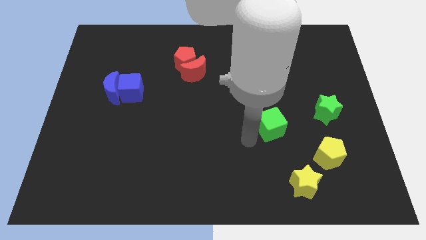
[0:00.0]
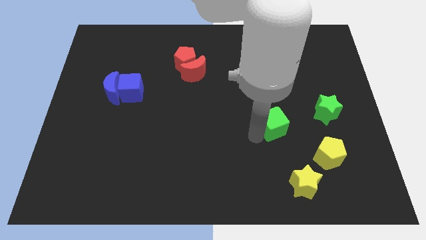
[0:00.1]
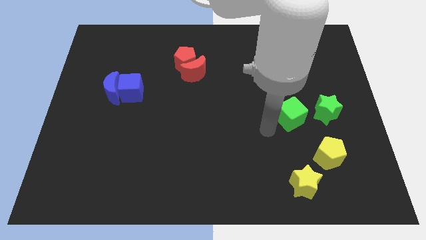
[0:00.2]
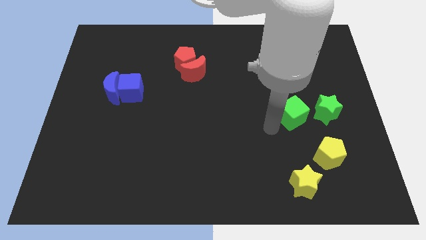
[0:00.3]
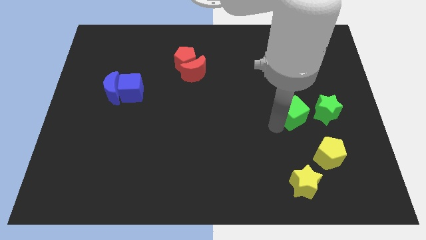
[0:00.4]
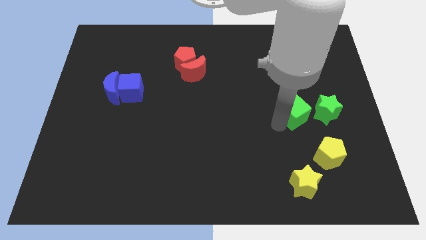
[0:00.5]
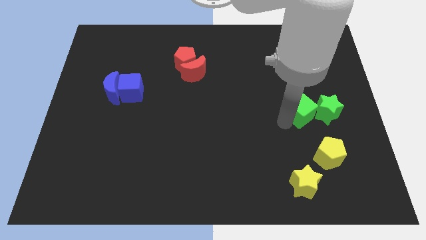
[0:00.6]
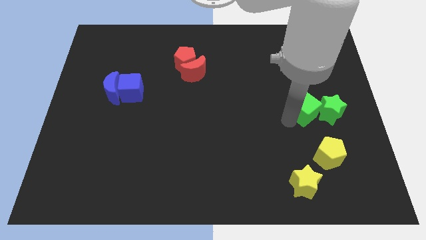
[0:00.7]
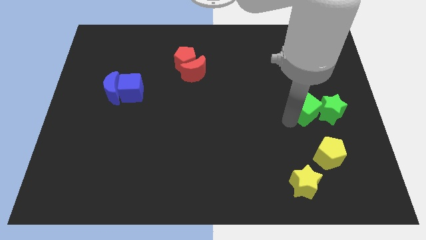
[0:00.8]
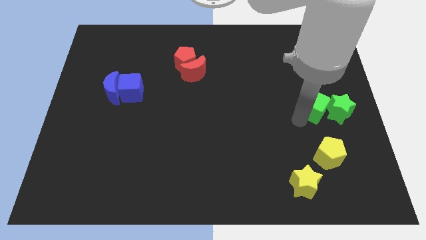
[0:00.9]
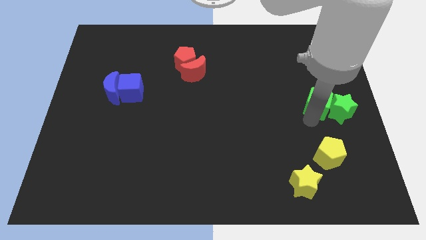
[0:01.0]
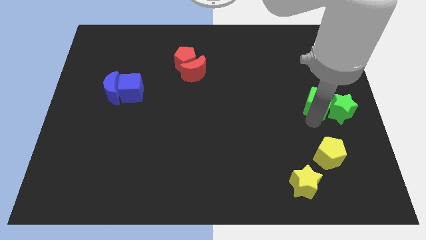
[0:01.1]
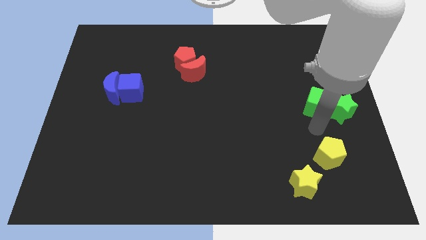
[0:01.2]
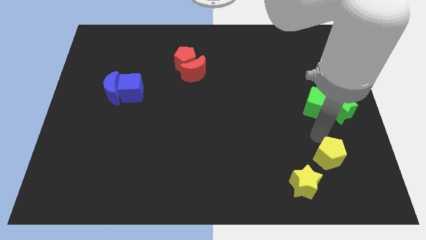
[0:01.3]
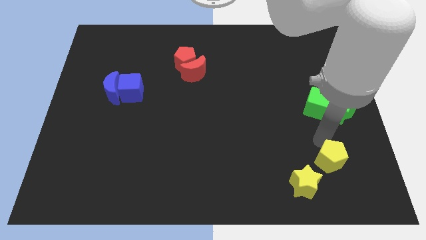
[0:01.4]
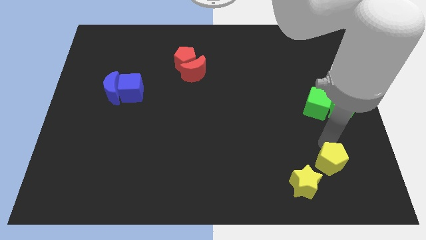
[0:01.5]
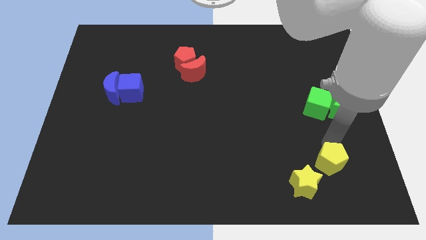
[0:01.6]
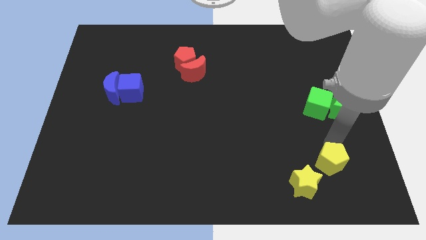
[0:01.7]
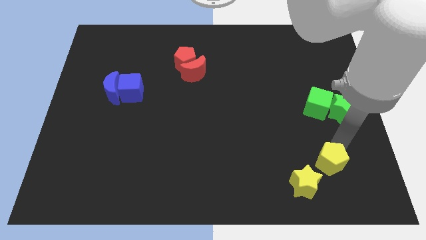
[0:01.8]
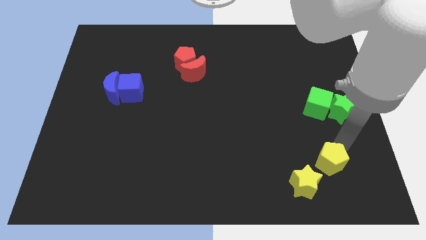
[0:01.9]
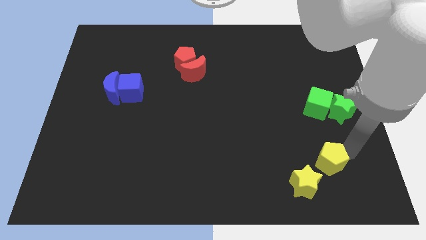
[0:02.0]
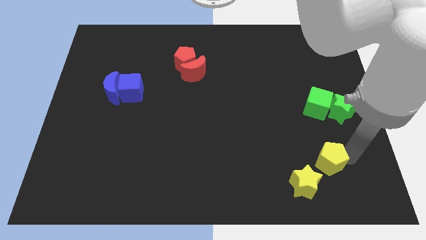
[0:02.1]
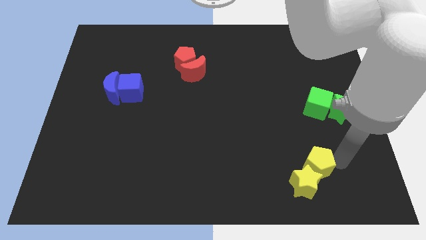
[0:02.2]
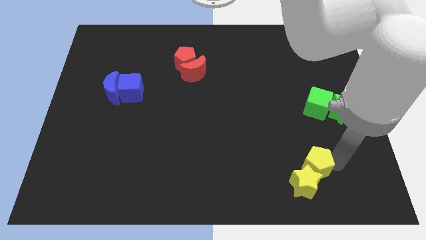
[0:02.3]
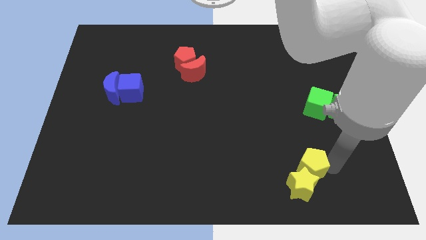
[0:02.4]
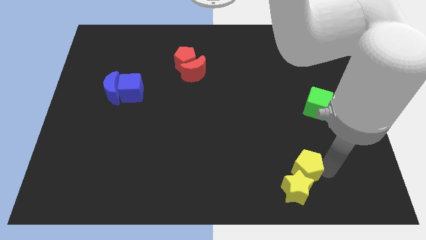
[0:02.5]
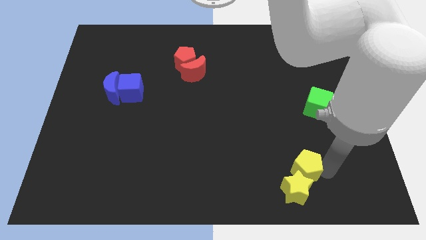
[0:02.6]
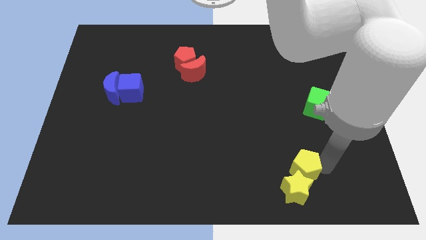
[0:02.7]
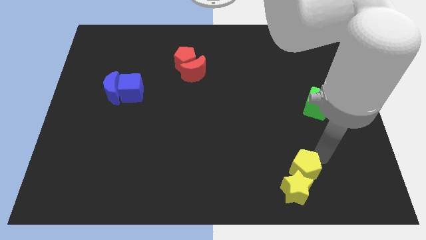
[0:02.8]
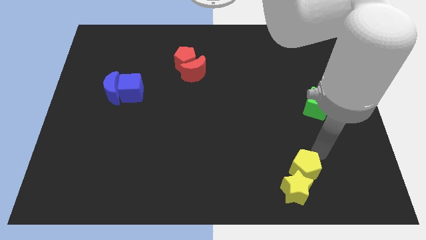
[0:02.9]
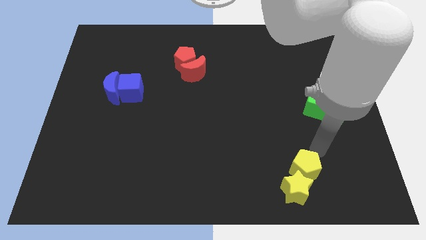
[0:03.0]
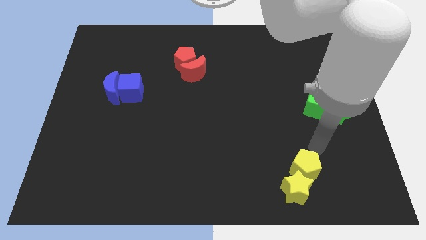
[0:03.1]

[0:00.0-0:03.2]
move yellow pentagon in to yellow star

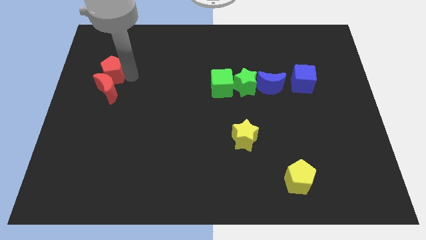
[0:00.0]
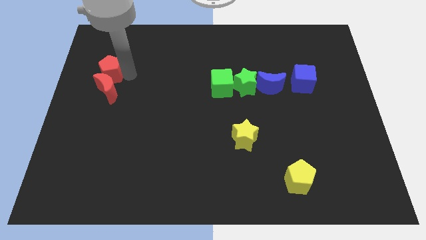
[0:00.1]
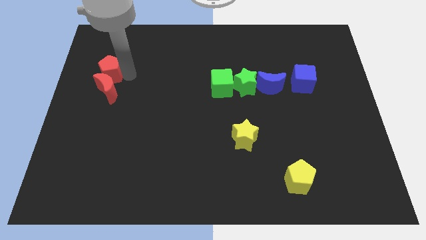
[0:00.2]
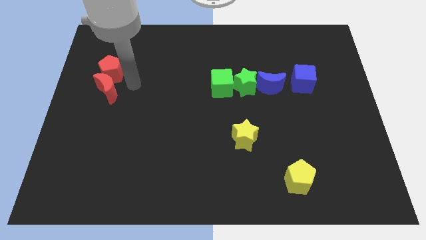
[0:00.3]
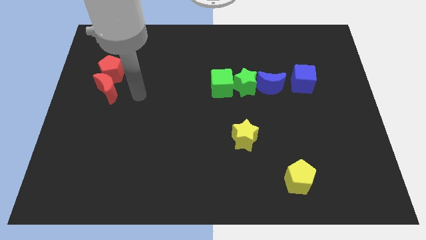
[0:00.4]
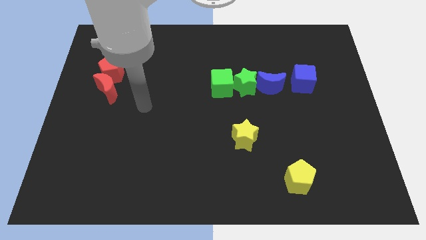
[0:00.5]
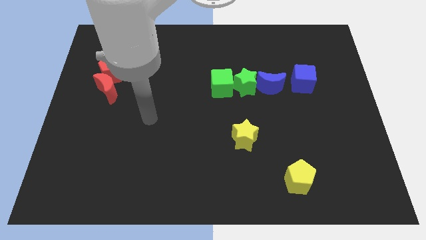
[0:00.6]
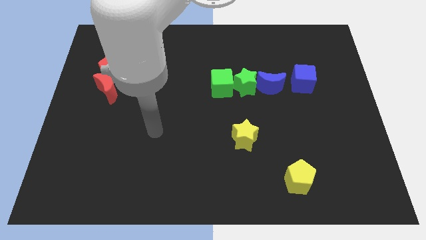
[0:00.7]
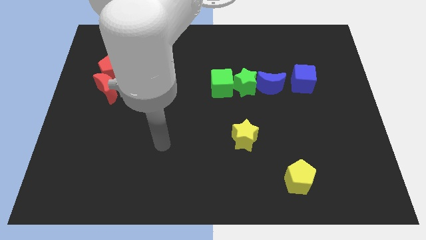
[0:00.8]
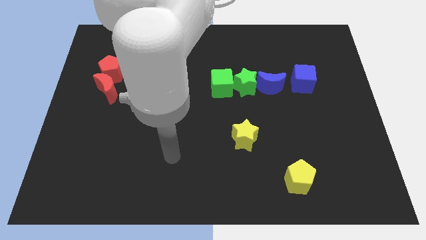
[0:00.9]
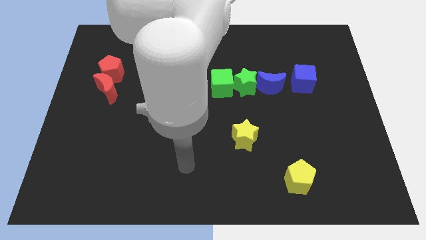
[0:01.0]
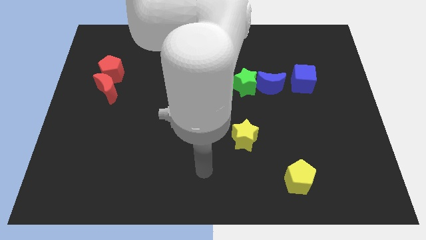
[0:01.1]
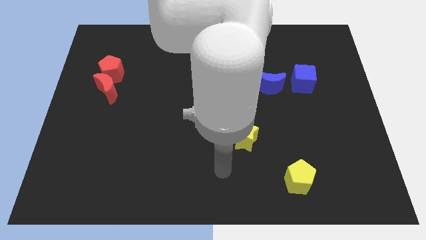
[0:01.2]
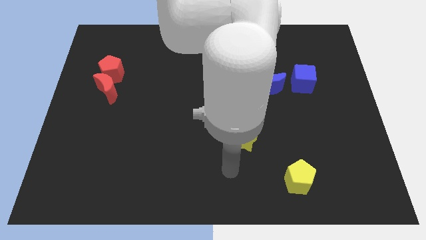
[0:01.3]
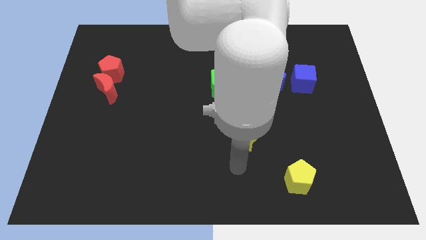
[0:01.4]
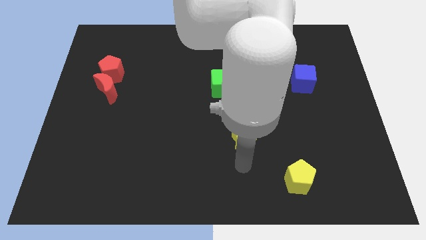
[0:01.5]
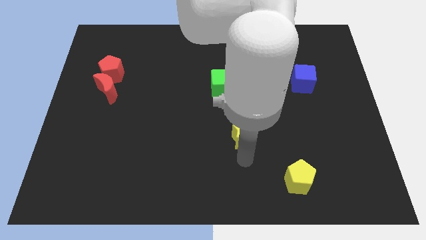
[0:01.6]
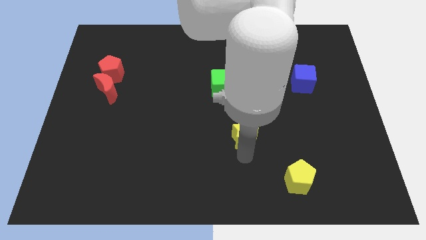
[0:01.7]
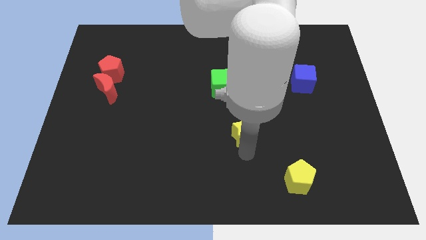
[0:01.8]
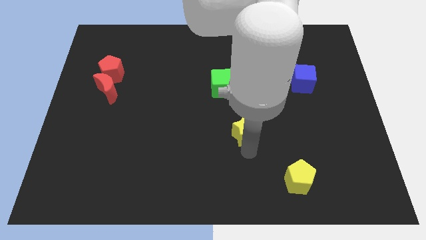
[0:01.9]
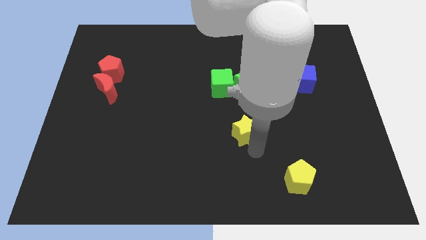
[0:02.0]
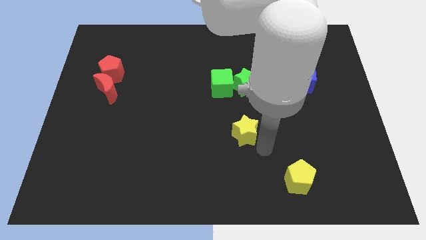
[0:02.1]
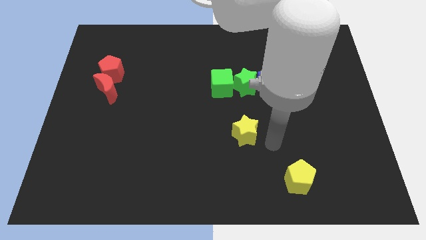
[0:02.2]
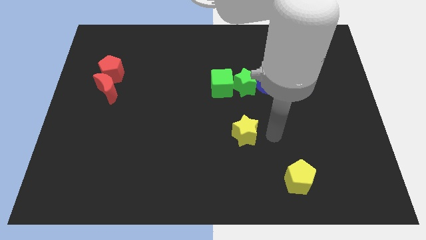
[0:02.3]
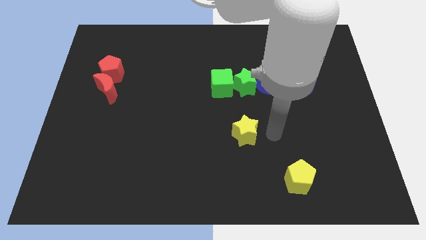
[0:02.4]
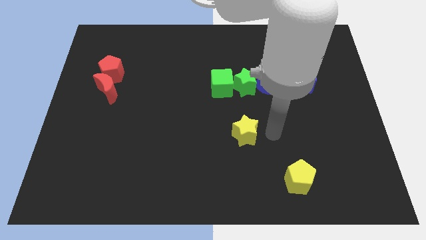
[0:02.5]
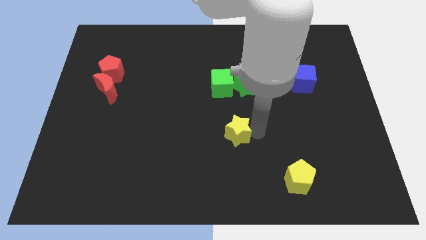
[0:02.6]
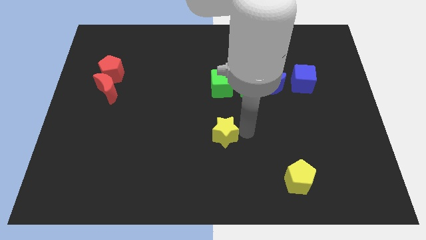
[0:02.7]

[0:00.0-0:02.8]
place yellow star to the bottom of green cube

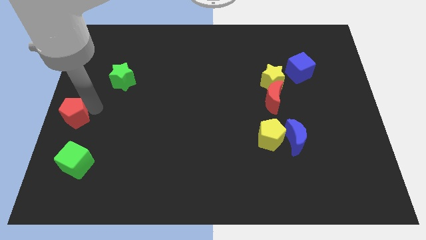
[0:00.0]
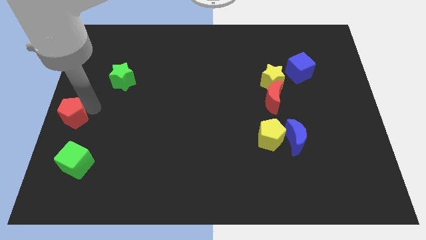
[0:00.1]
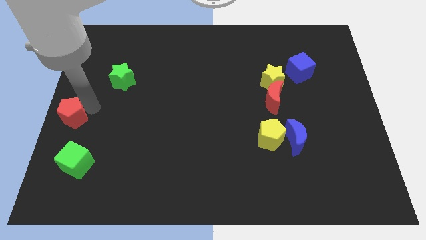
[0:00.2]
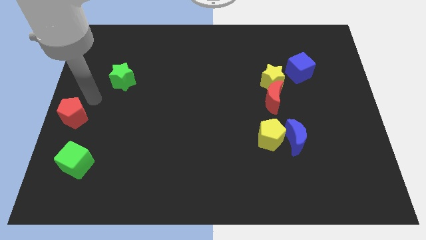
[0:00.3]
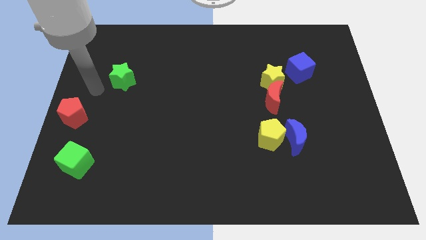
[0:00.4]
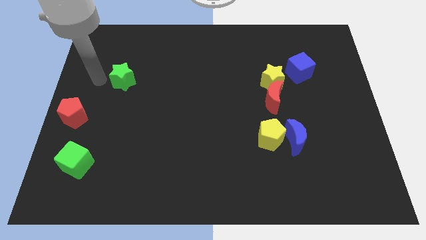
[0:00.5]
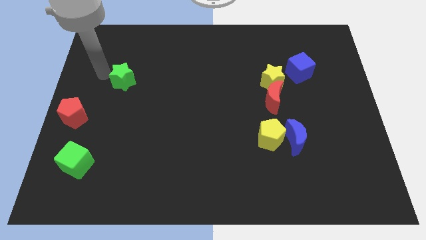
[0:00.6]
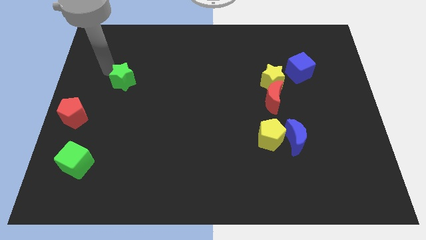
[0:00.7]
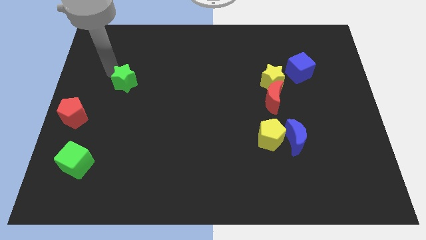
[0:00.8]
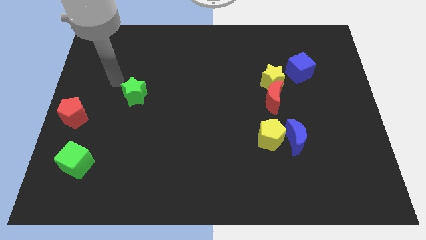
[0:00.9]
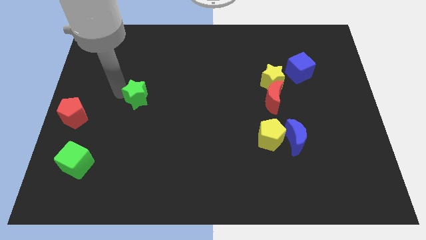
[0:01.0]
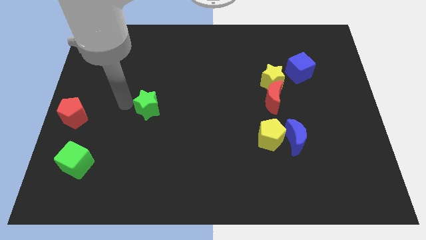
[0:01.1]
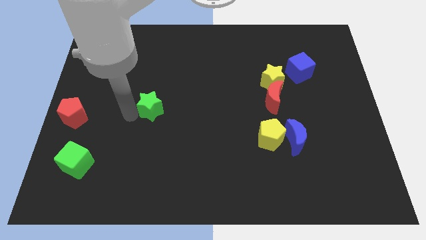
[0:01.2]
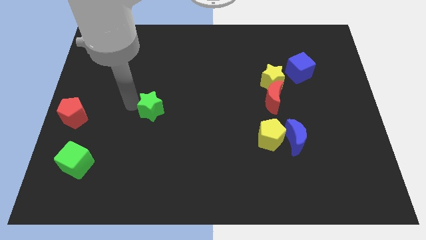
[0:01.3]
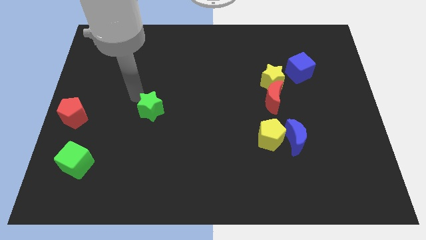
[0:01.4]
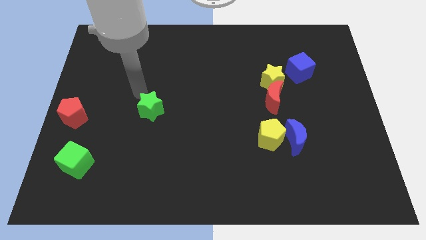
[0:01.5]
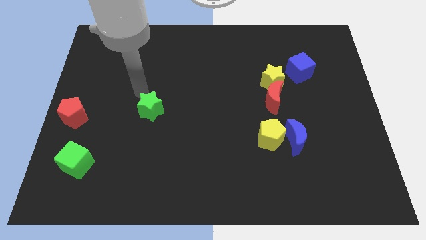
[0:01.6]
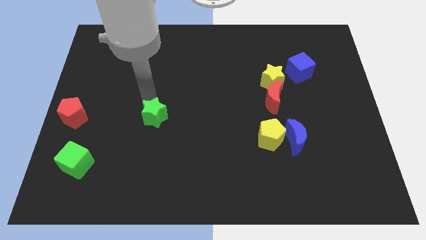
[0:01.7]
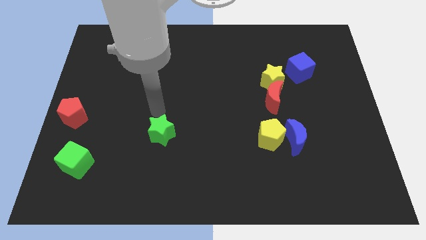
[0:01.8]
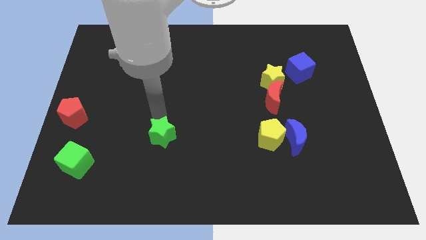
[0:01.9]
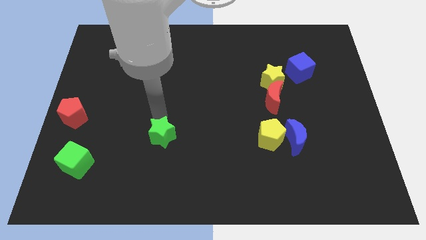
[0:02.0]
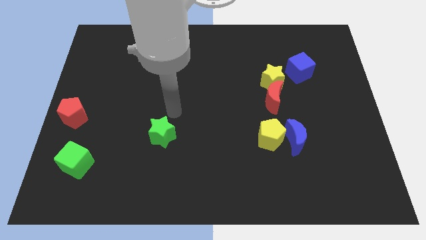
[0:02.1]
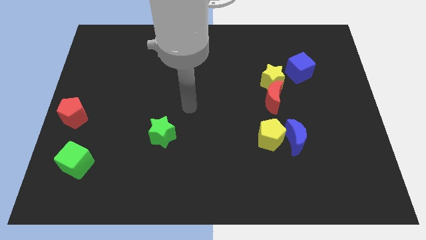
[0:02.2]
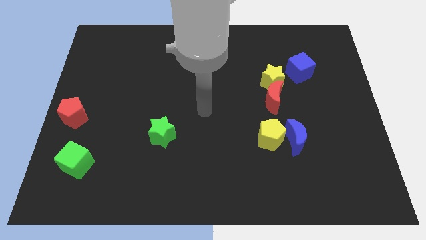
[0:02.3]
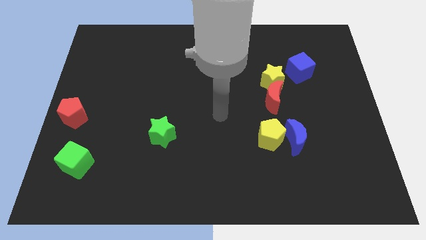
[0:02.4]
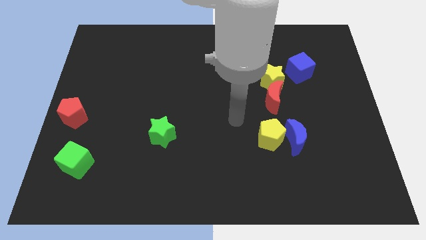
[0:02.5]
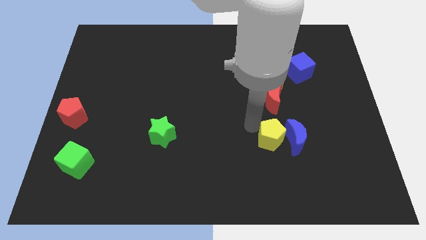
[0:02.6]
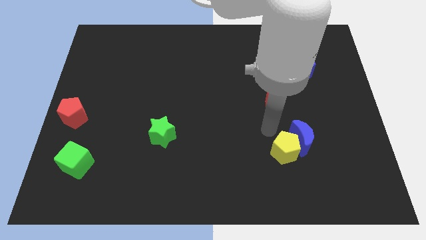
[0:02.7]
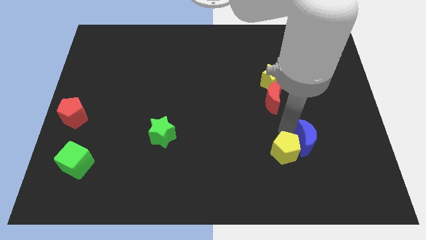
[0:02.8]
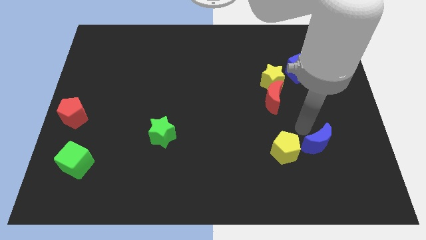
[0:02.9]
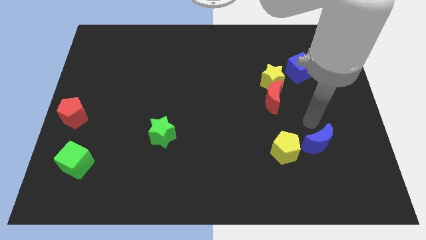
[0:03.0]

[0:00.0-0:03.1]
place the green star in between the red pentagon and yellow pentagon

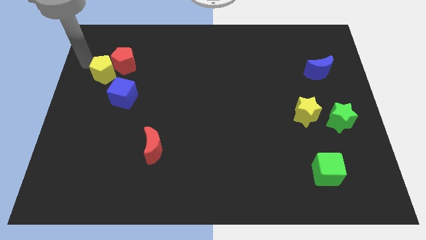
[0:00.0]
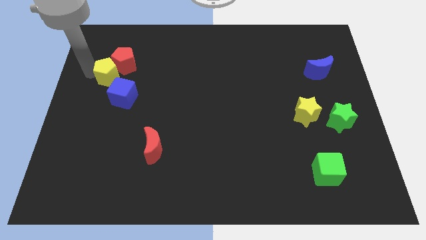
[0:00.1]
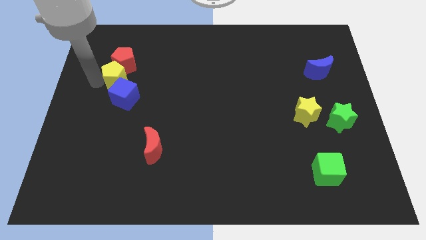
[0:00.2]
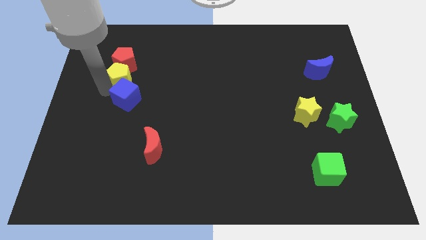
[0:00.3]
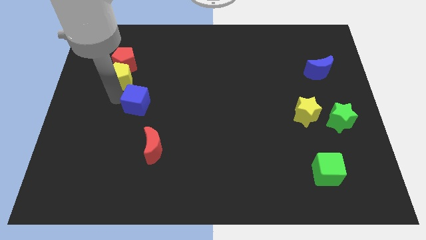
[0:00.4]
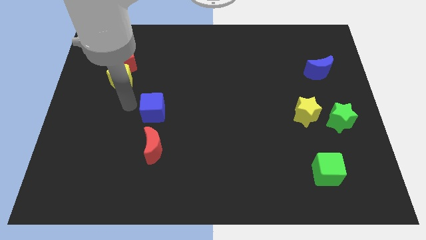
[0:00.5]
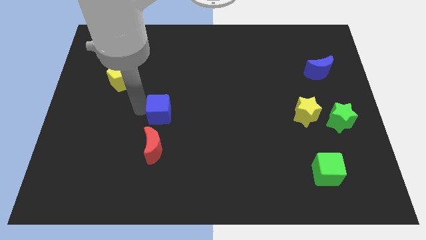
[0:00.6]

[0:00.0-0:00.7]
push blue cube above red crescent
